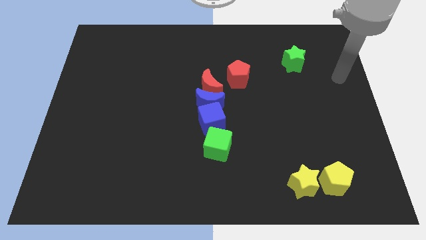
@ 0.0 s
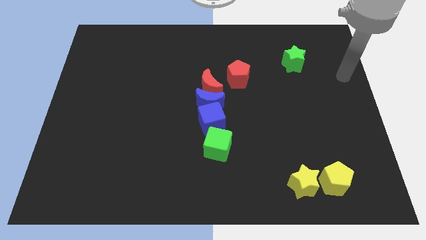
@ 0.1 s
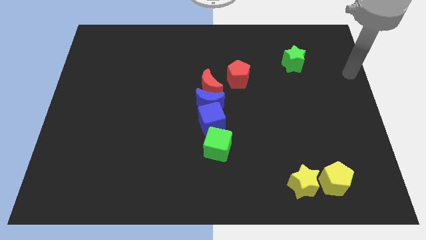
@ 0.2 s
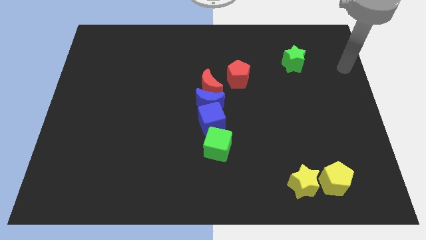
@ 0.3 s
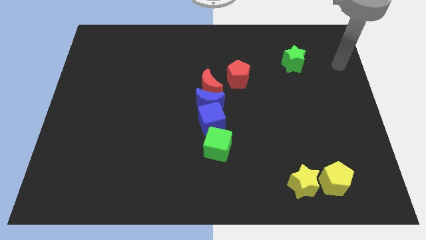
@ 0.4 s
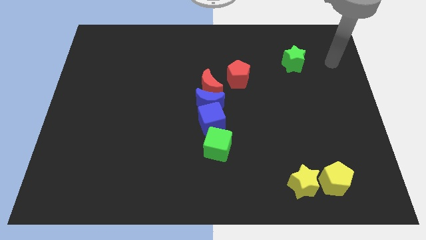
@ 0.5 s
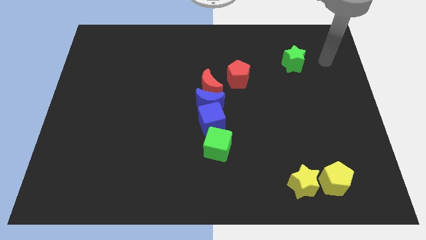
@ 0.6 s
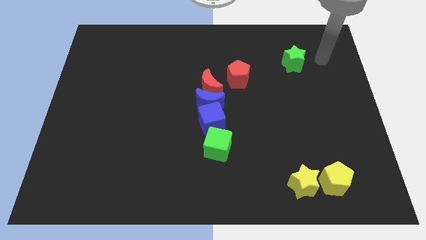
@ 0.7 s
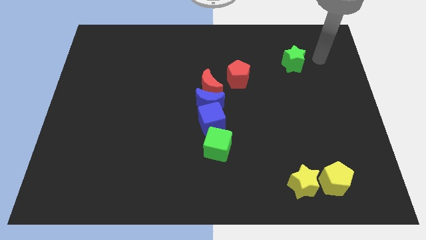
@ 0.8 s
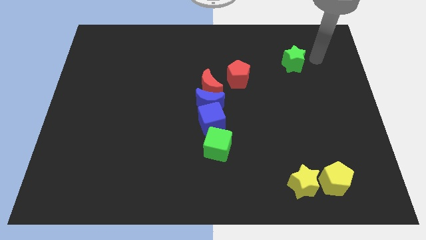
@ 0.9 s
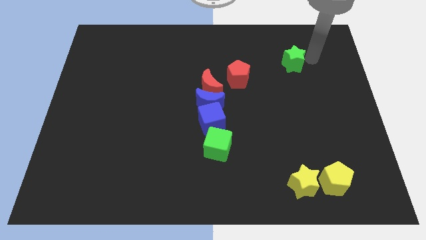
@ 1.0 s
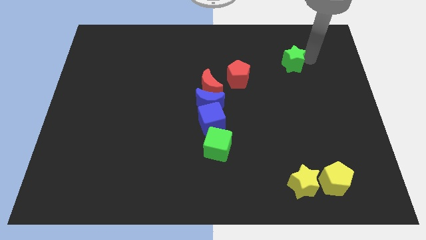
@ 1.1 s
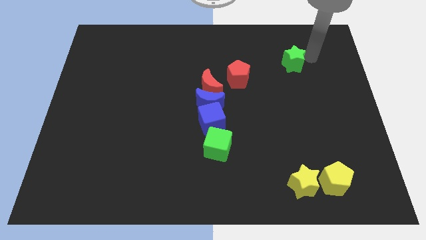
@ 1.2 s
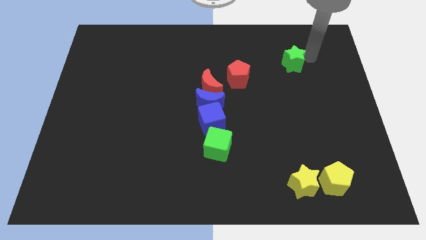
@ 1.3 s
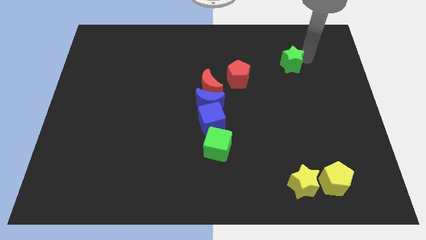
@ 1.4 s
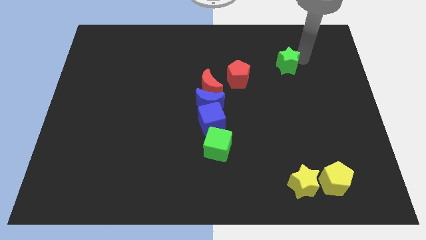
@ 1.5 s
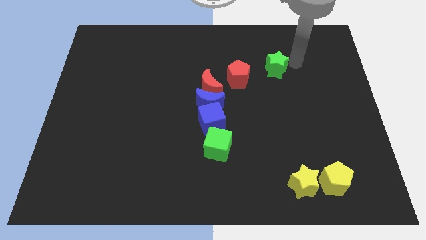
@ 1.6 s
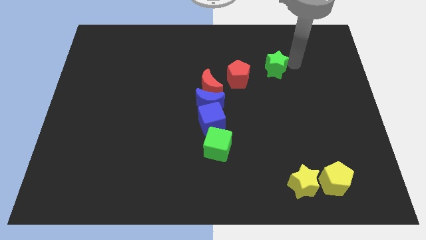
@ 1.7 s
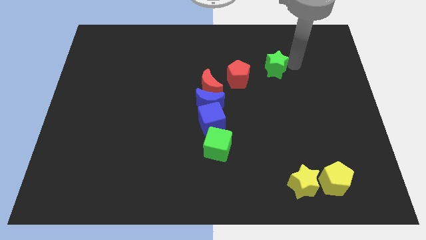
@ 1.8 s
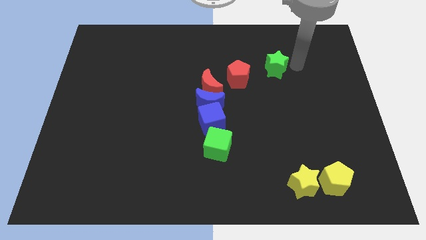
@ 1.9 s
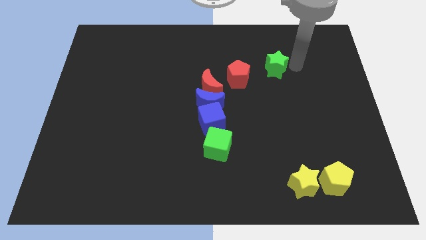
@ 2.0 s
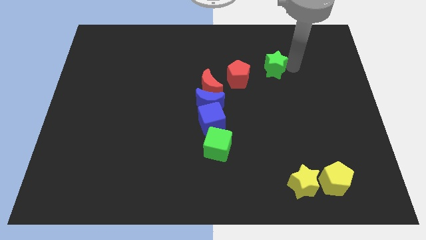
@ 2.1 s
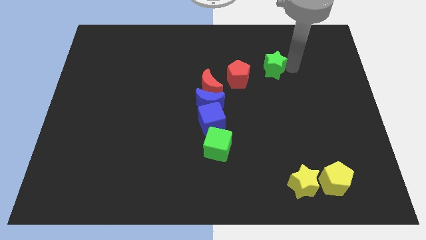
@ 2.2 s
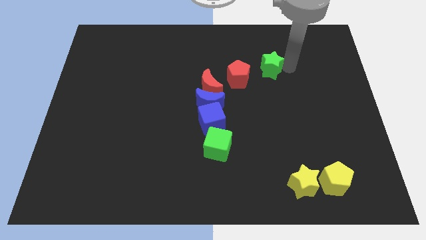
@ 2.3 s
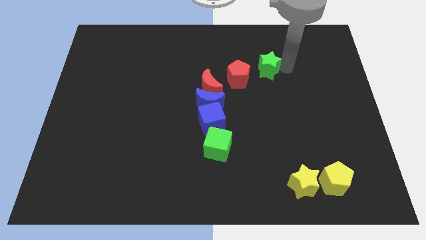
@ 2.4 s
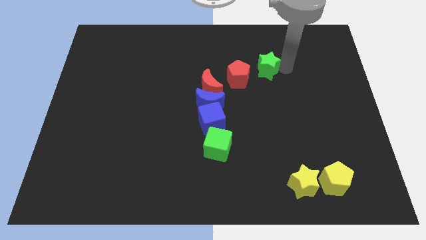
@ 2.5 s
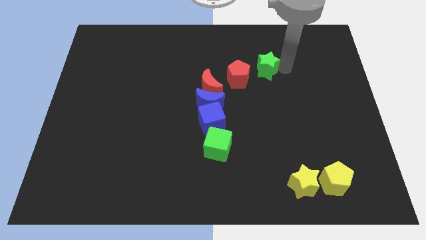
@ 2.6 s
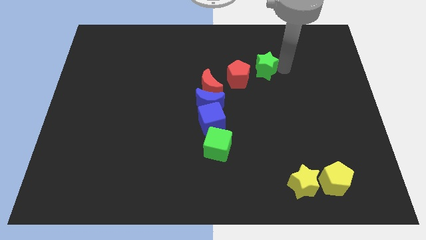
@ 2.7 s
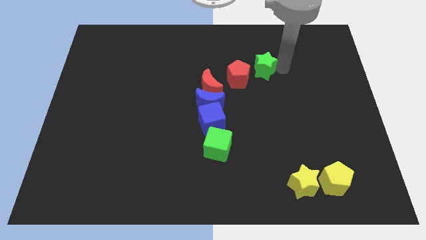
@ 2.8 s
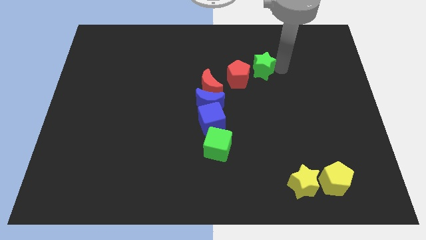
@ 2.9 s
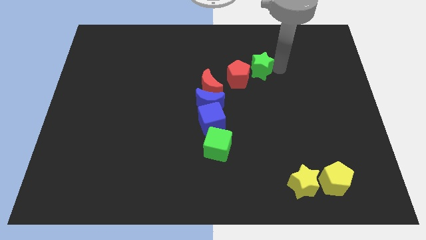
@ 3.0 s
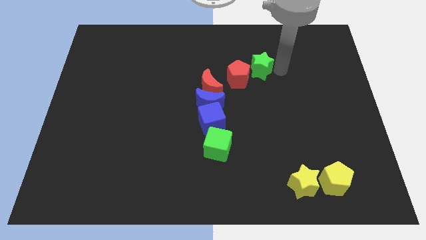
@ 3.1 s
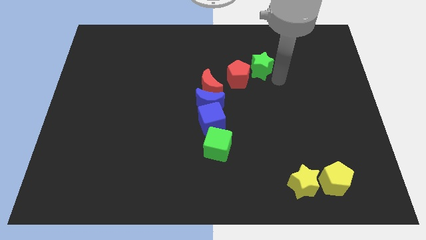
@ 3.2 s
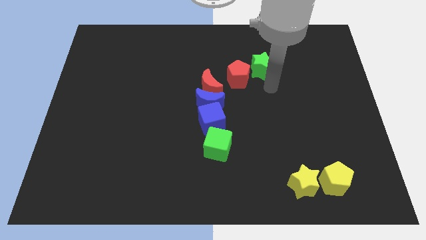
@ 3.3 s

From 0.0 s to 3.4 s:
move the green star top right to the red pentagon

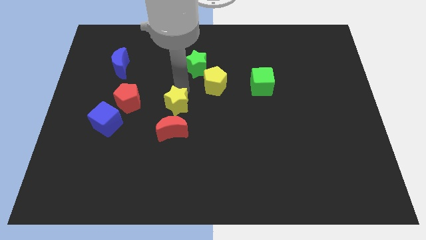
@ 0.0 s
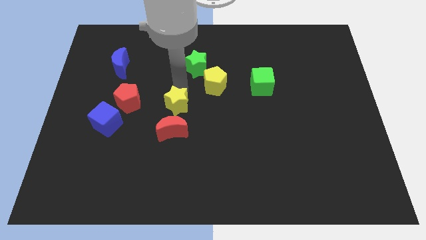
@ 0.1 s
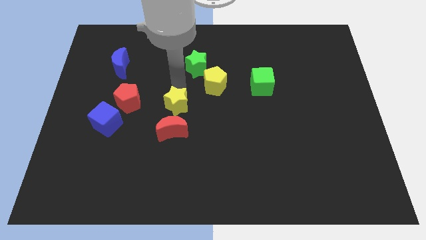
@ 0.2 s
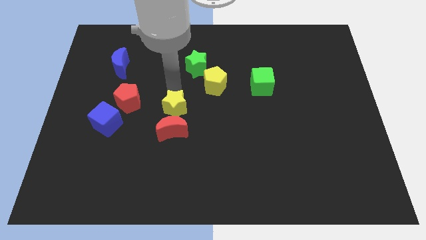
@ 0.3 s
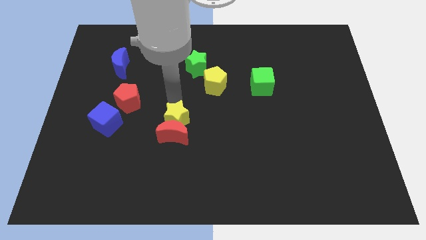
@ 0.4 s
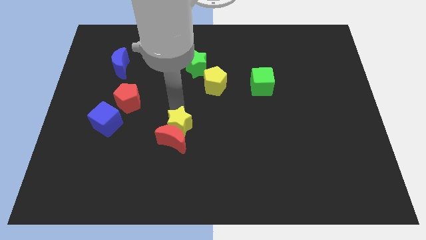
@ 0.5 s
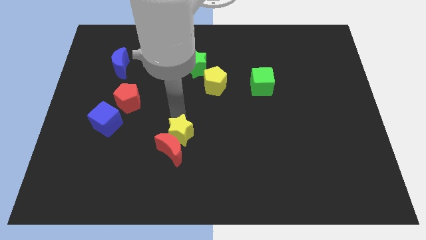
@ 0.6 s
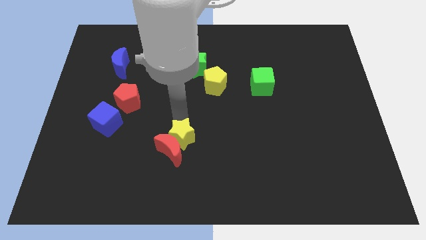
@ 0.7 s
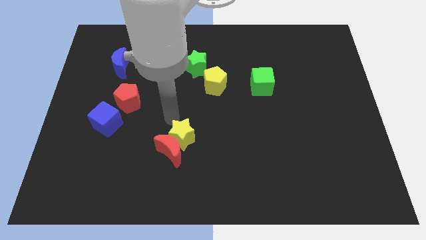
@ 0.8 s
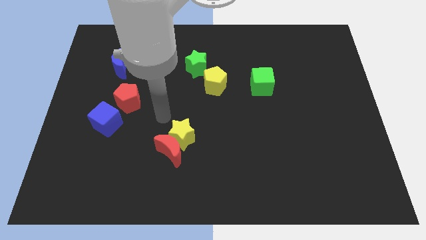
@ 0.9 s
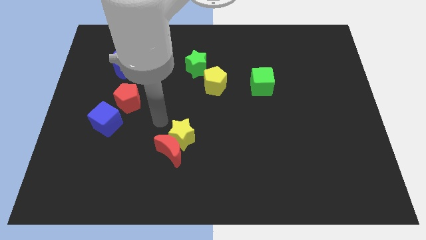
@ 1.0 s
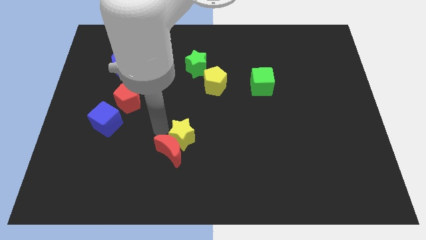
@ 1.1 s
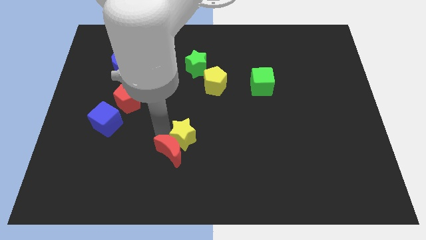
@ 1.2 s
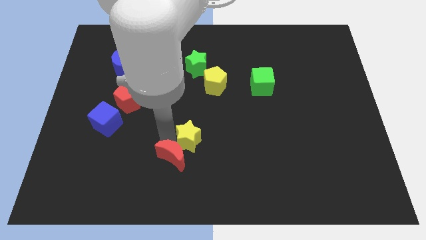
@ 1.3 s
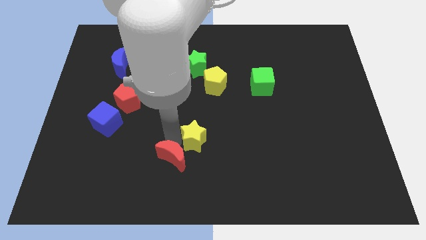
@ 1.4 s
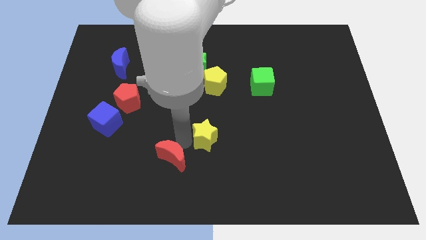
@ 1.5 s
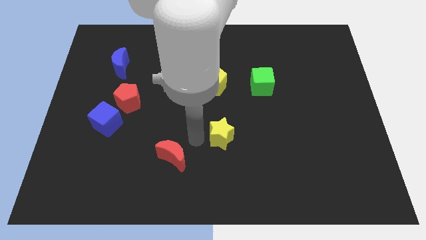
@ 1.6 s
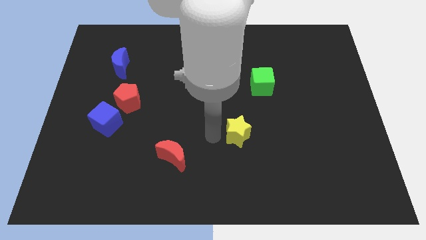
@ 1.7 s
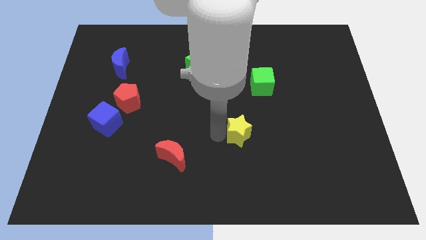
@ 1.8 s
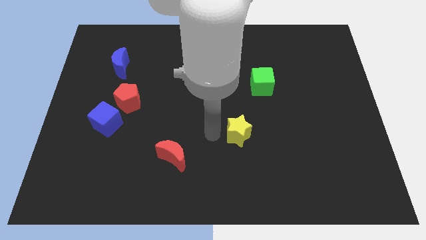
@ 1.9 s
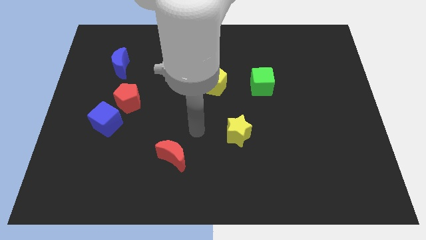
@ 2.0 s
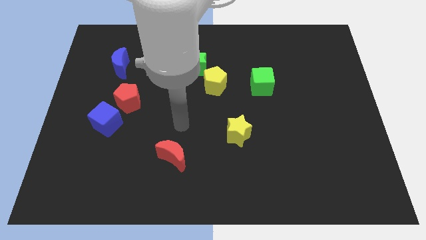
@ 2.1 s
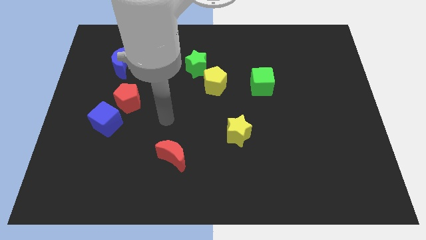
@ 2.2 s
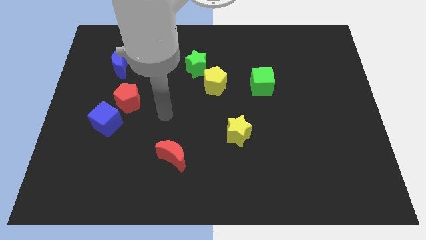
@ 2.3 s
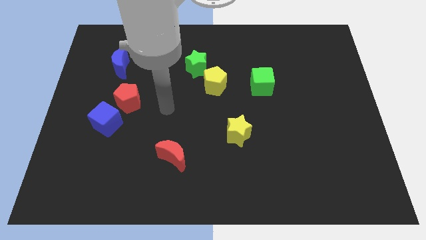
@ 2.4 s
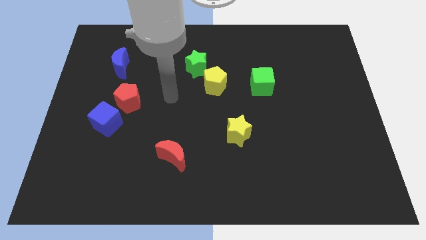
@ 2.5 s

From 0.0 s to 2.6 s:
move the yellow star diagonal below the yellow pentagon

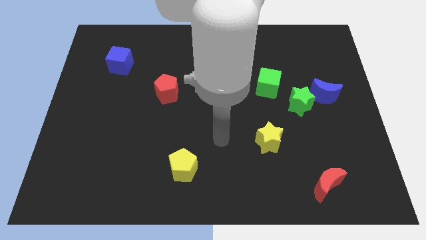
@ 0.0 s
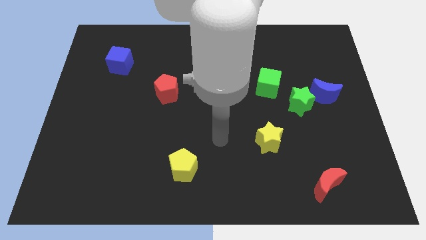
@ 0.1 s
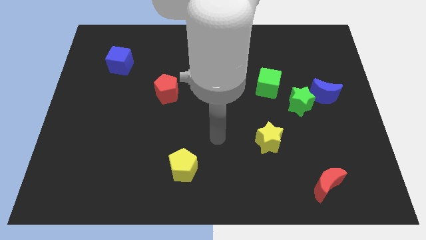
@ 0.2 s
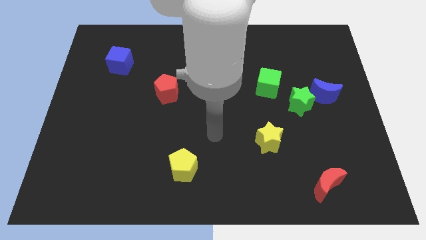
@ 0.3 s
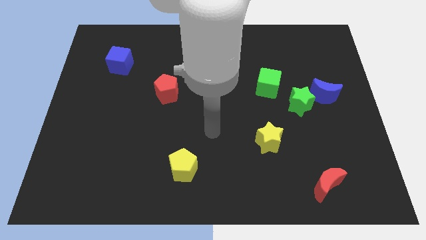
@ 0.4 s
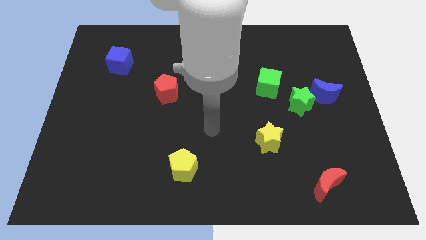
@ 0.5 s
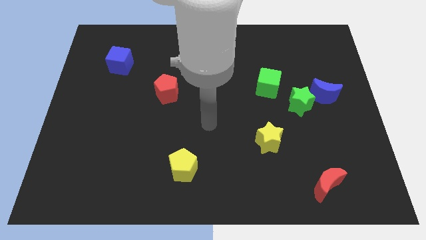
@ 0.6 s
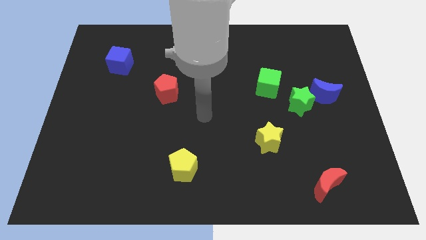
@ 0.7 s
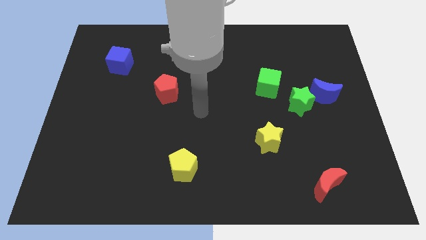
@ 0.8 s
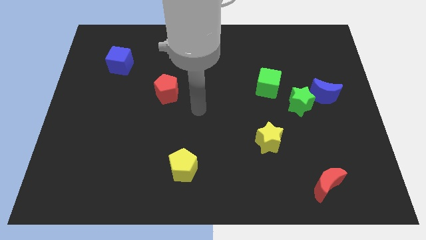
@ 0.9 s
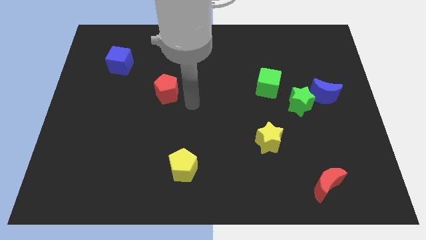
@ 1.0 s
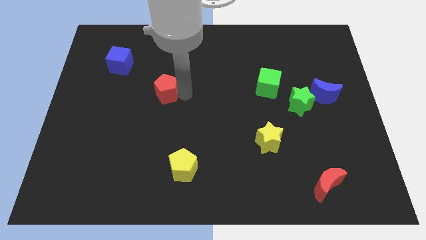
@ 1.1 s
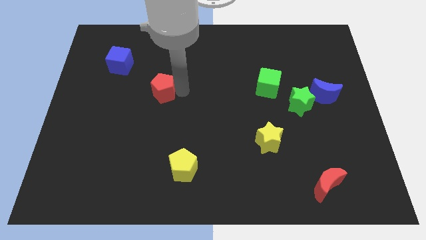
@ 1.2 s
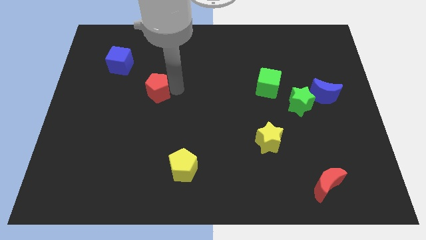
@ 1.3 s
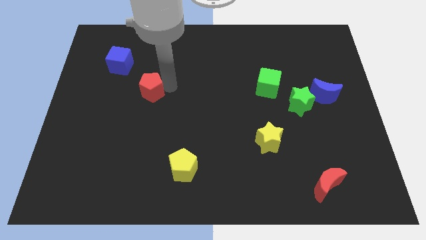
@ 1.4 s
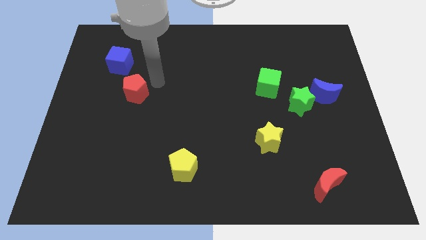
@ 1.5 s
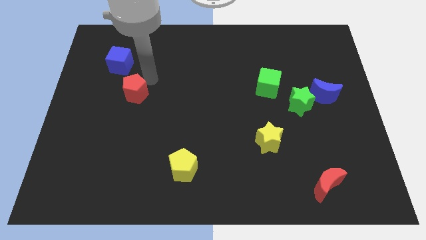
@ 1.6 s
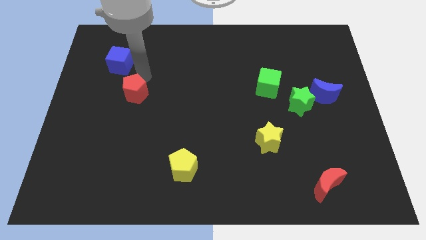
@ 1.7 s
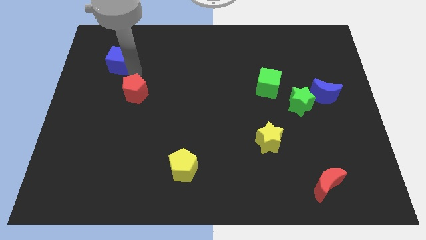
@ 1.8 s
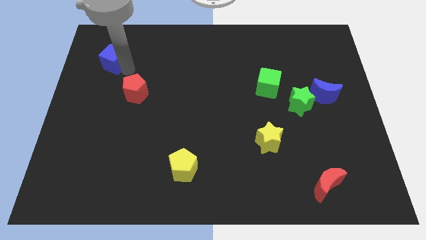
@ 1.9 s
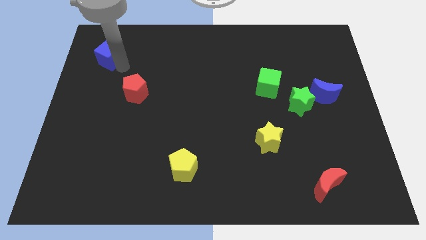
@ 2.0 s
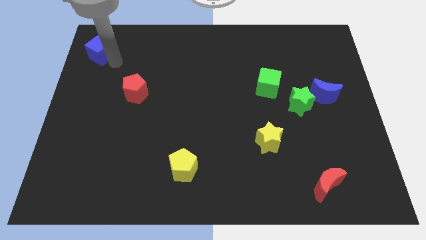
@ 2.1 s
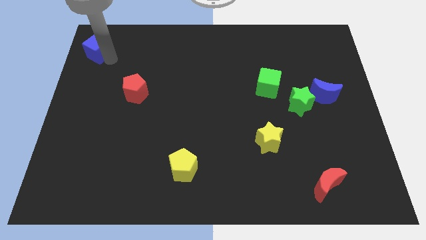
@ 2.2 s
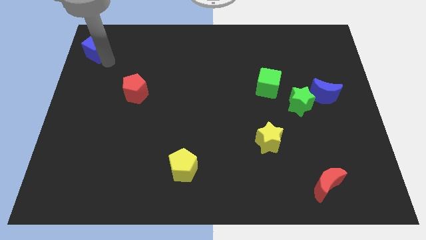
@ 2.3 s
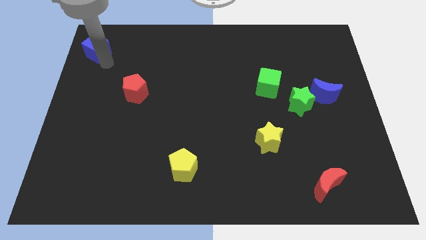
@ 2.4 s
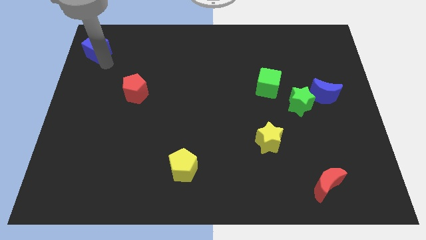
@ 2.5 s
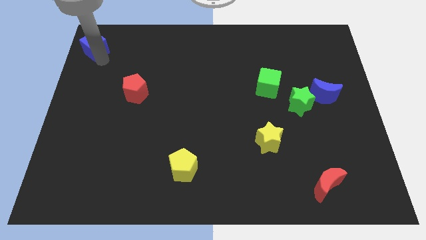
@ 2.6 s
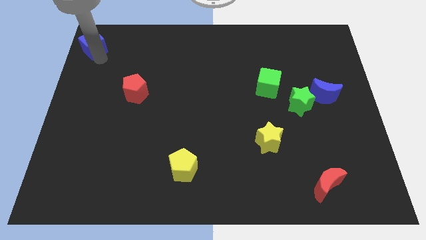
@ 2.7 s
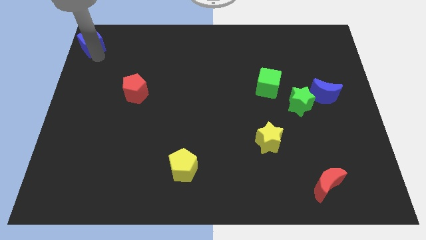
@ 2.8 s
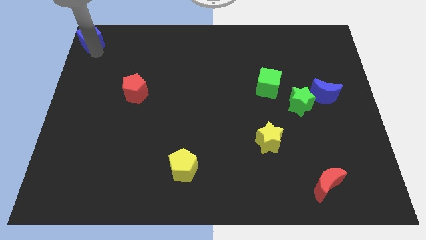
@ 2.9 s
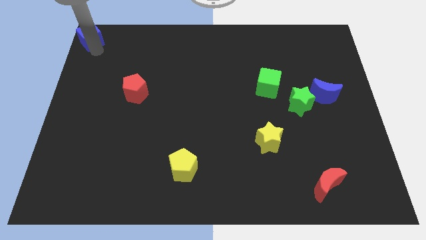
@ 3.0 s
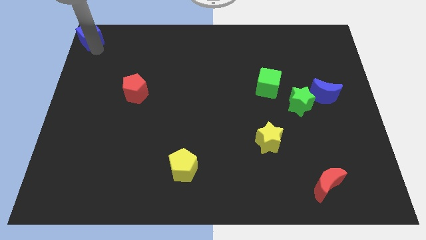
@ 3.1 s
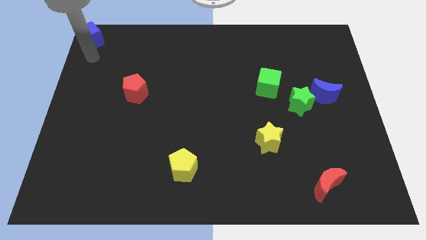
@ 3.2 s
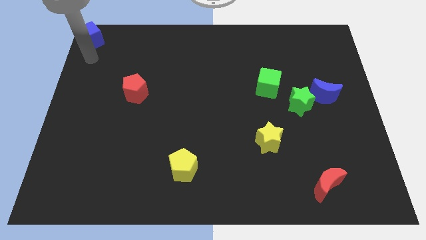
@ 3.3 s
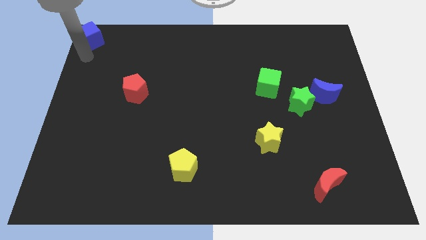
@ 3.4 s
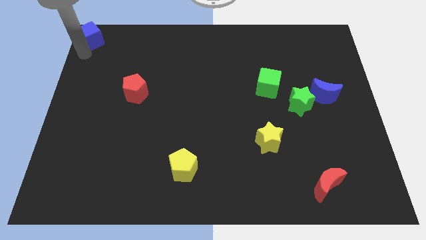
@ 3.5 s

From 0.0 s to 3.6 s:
place the blue cube to the top left corner of the board
